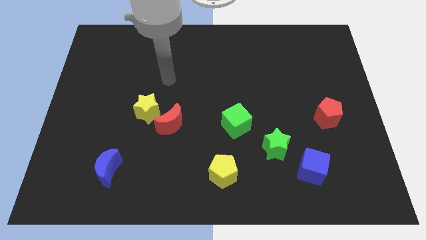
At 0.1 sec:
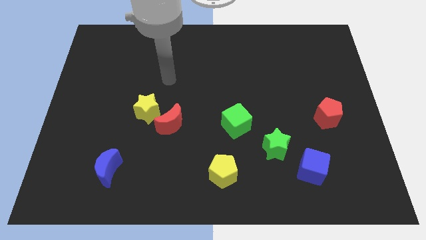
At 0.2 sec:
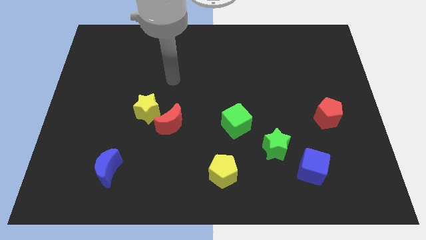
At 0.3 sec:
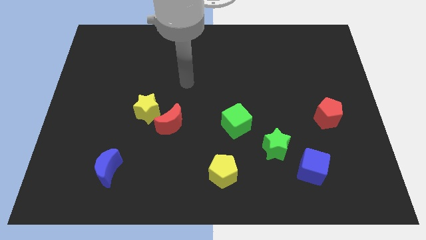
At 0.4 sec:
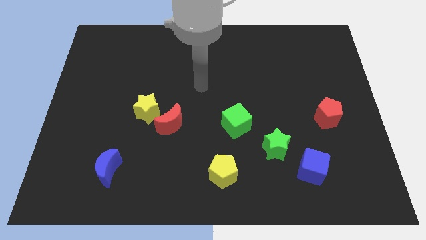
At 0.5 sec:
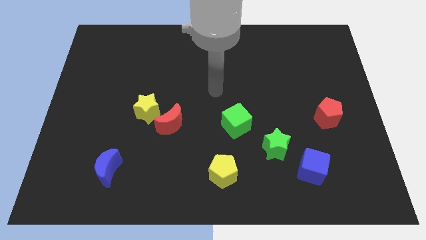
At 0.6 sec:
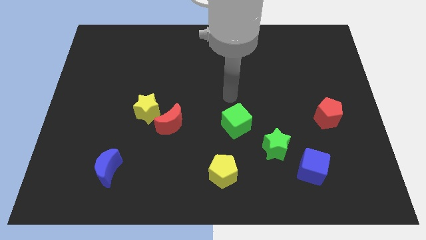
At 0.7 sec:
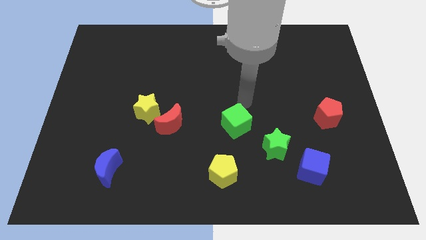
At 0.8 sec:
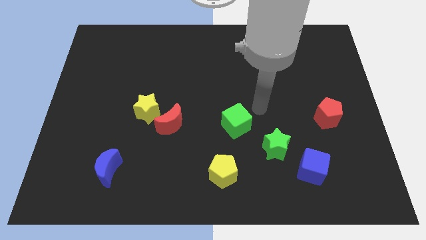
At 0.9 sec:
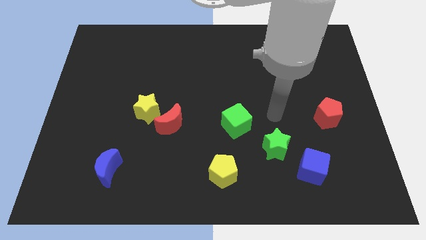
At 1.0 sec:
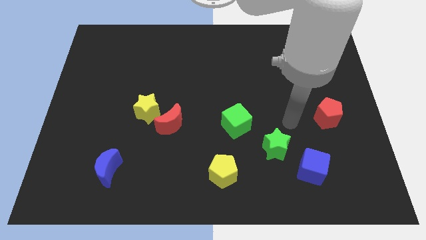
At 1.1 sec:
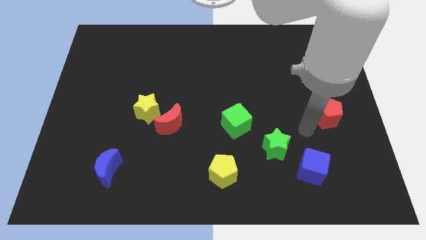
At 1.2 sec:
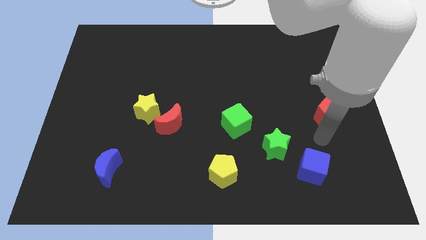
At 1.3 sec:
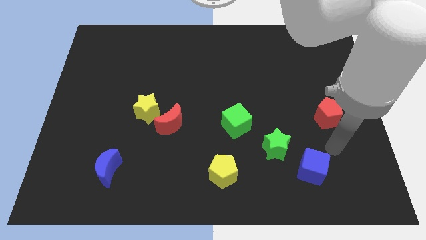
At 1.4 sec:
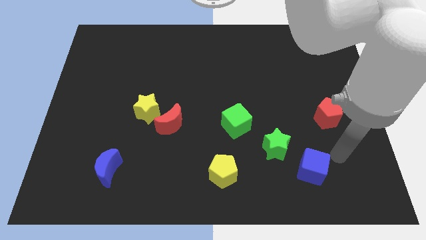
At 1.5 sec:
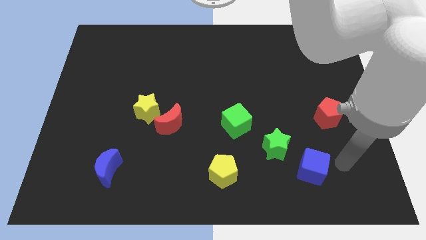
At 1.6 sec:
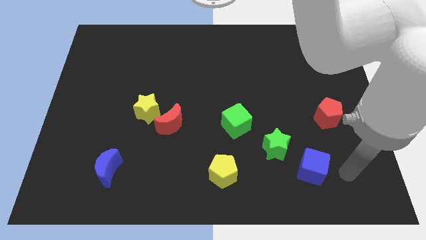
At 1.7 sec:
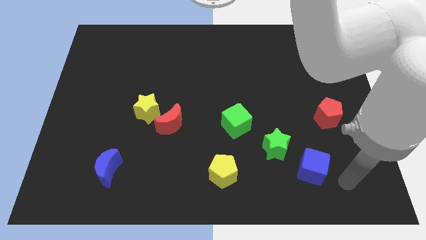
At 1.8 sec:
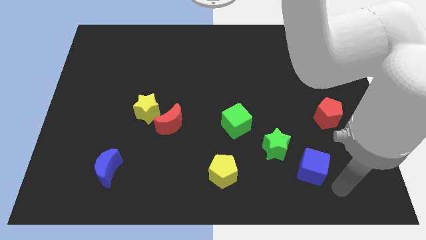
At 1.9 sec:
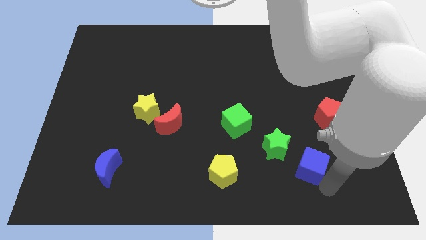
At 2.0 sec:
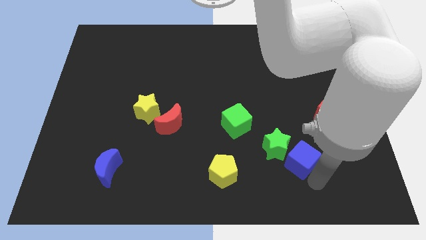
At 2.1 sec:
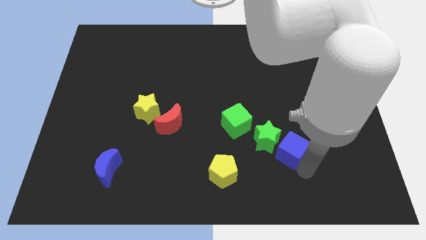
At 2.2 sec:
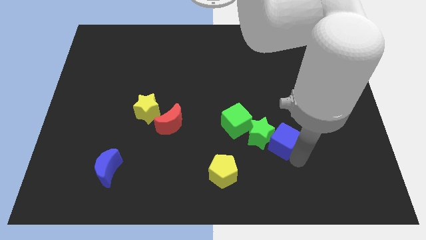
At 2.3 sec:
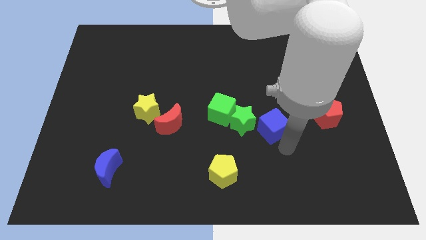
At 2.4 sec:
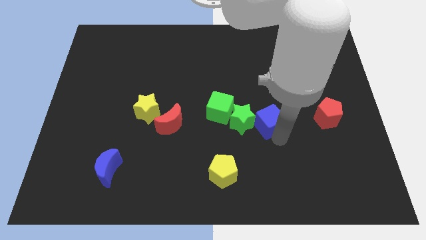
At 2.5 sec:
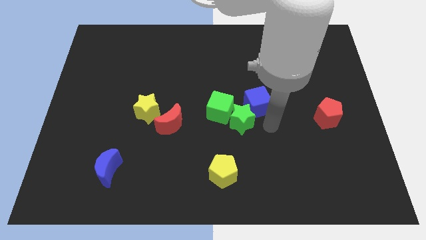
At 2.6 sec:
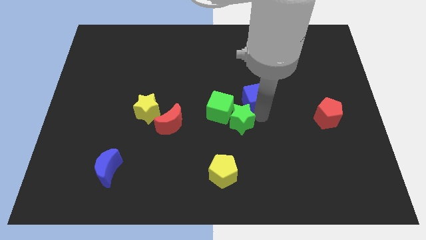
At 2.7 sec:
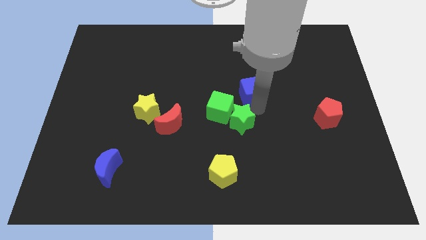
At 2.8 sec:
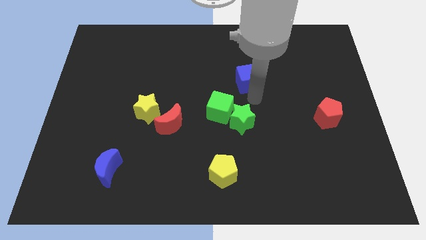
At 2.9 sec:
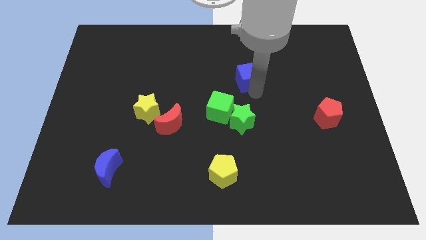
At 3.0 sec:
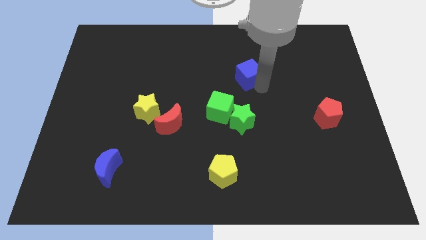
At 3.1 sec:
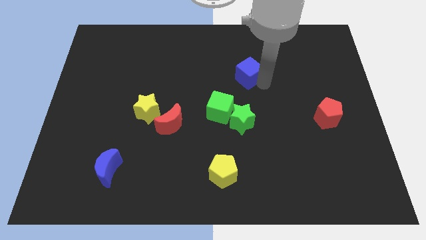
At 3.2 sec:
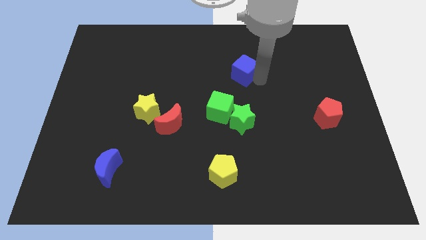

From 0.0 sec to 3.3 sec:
move the blue cube vertically to the top side of the green star

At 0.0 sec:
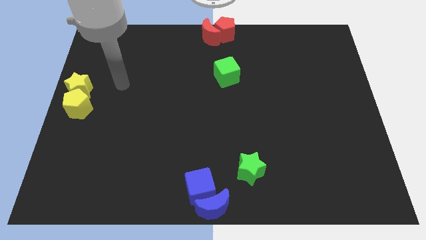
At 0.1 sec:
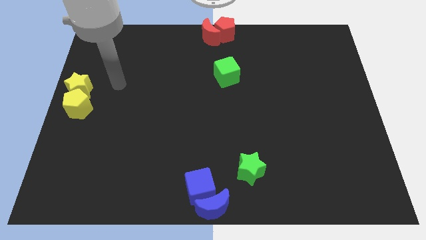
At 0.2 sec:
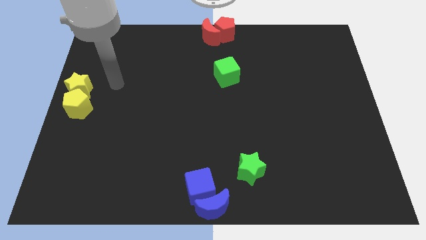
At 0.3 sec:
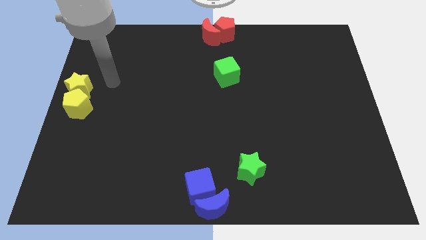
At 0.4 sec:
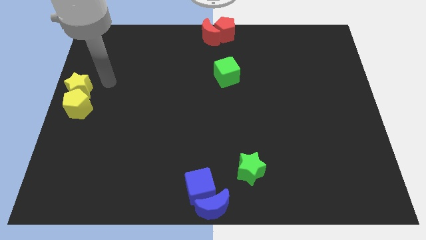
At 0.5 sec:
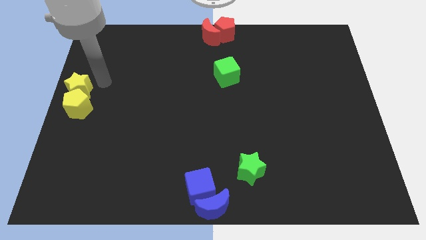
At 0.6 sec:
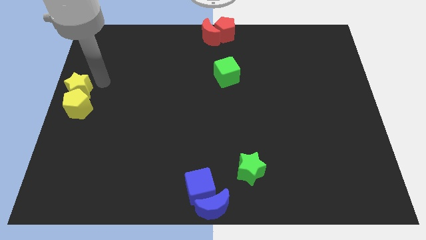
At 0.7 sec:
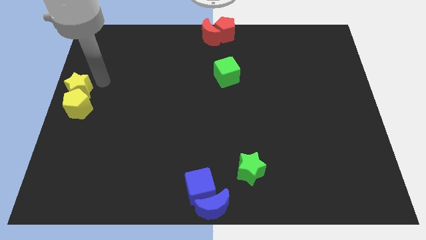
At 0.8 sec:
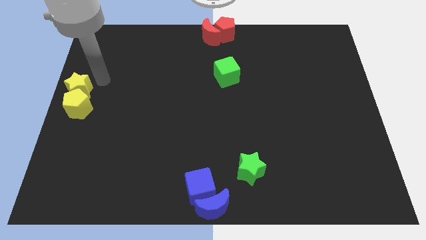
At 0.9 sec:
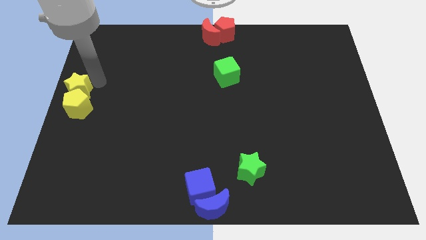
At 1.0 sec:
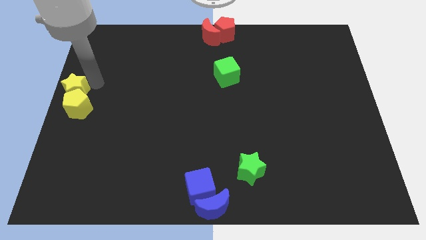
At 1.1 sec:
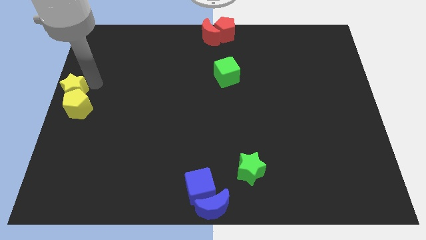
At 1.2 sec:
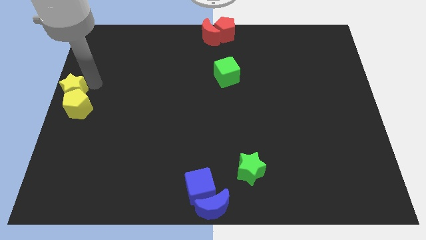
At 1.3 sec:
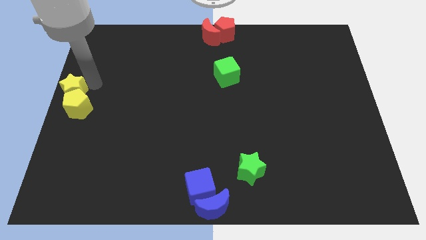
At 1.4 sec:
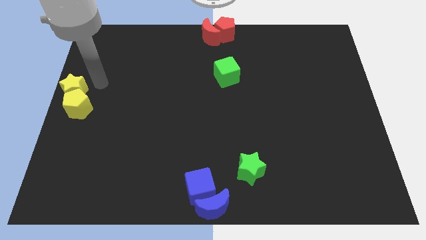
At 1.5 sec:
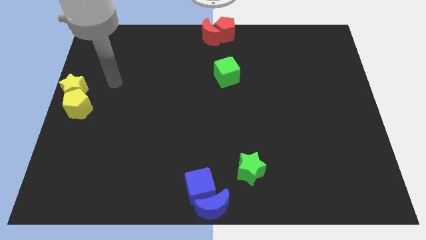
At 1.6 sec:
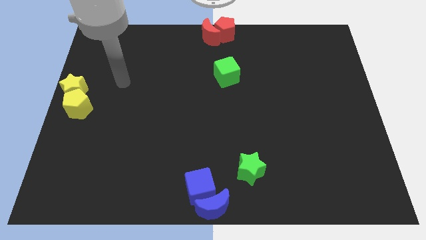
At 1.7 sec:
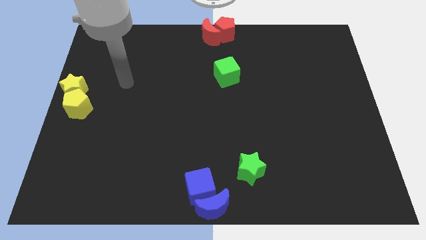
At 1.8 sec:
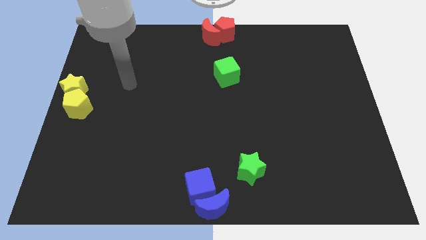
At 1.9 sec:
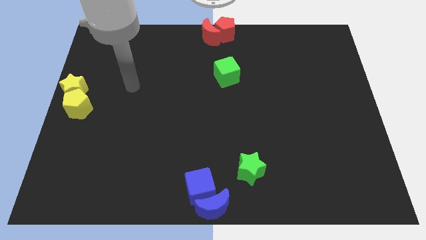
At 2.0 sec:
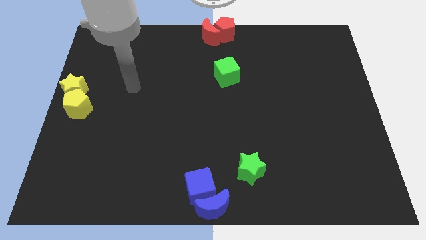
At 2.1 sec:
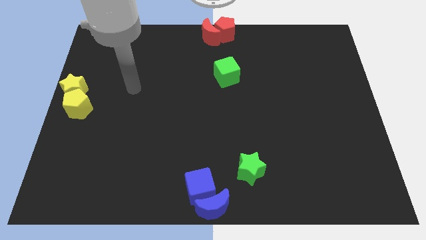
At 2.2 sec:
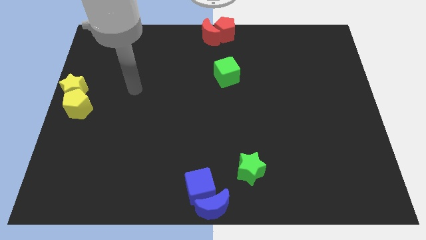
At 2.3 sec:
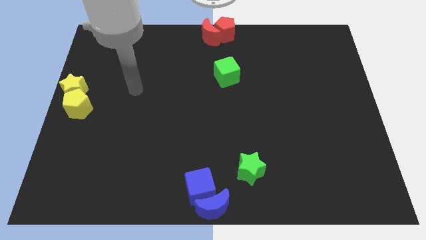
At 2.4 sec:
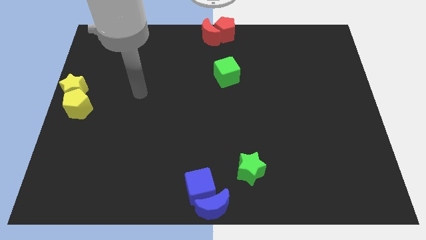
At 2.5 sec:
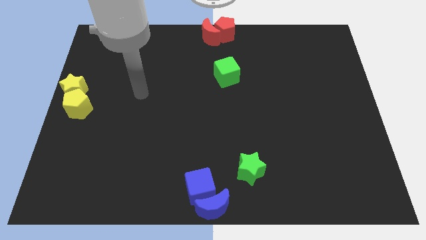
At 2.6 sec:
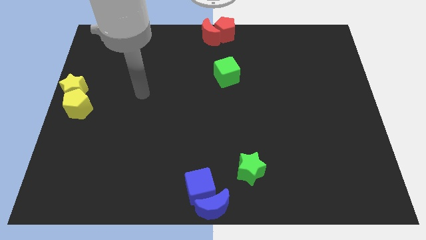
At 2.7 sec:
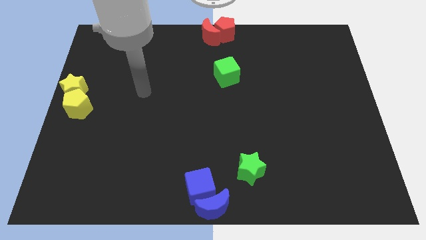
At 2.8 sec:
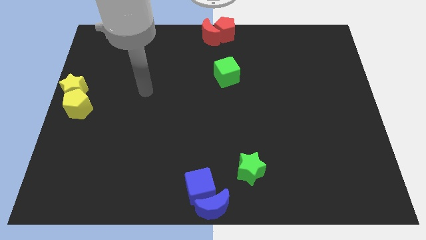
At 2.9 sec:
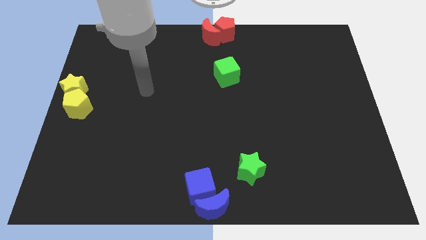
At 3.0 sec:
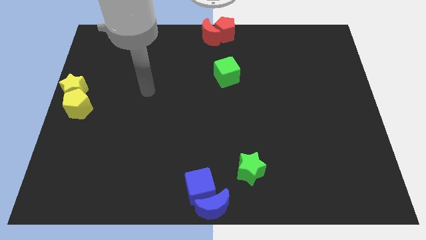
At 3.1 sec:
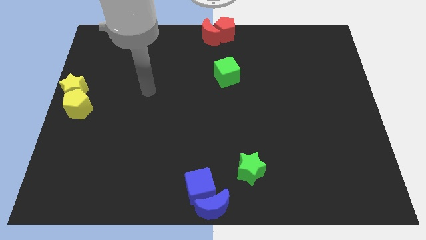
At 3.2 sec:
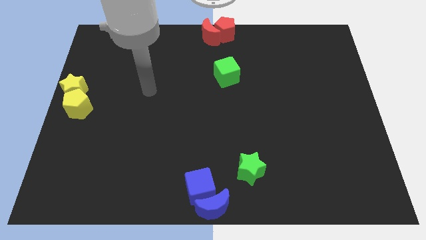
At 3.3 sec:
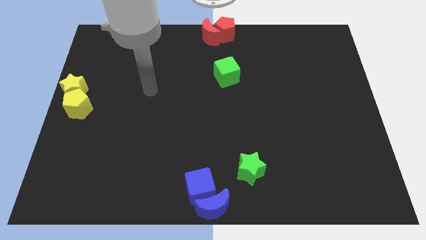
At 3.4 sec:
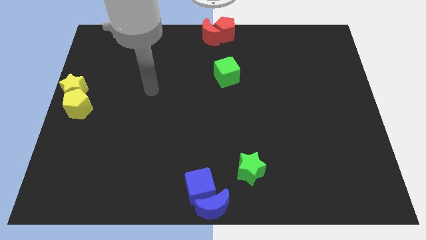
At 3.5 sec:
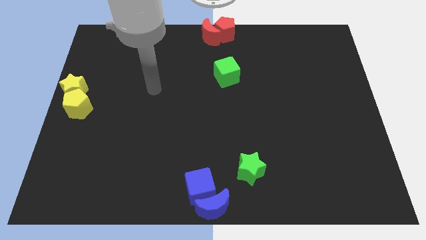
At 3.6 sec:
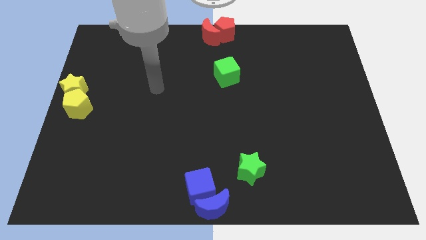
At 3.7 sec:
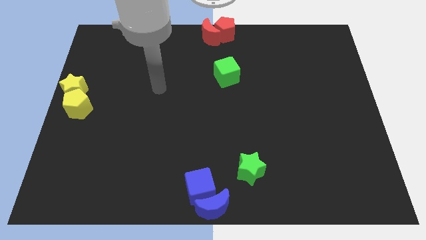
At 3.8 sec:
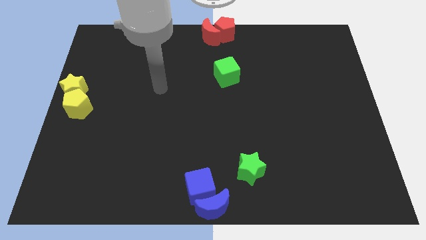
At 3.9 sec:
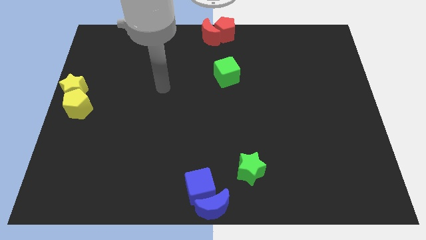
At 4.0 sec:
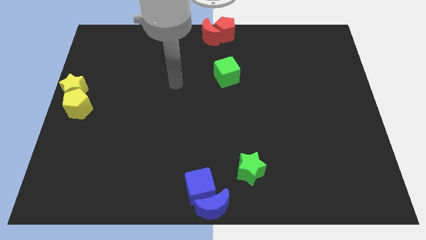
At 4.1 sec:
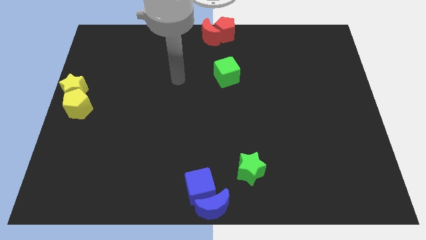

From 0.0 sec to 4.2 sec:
move yourself away from the yellow star

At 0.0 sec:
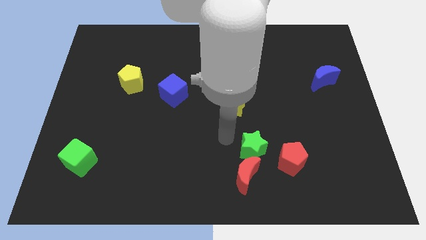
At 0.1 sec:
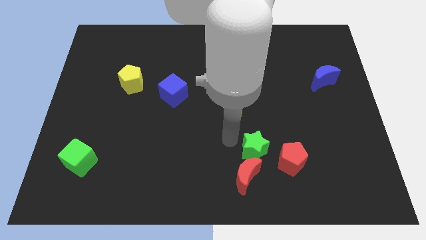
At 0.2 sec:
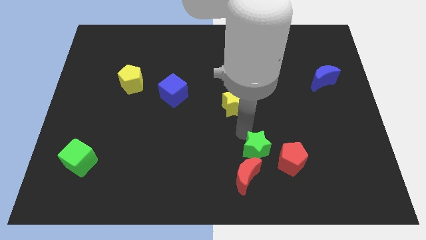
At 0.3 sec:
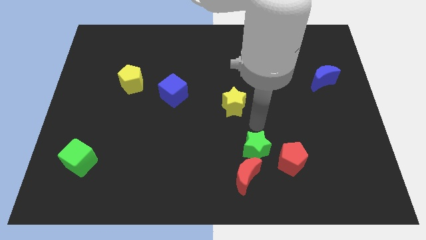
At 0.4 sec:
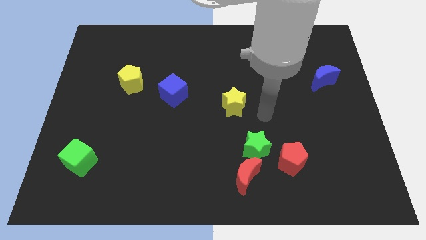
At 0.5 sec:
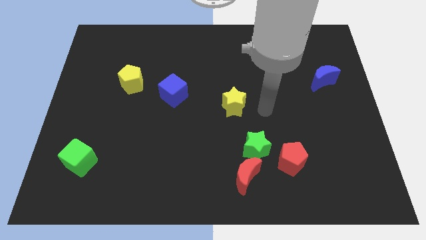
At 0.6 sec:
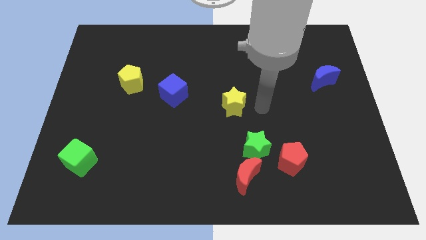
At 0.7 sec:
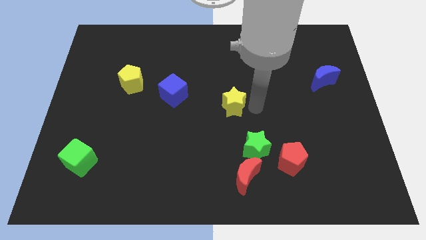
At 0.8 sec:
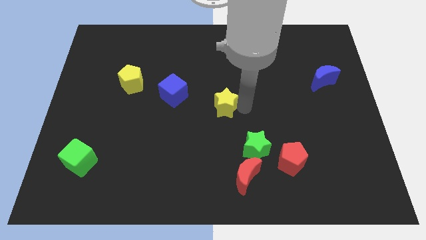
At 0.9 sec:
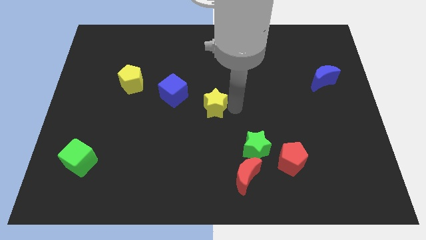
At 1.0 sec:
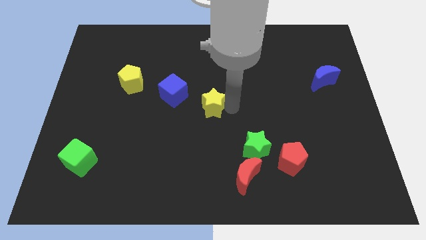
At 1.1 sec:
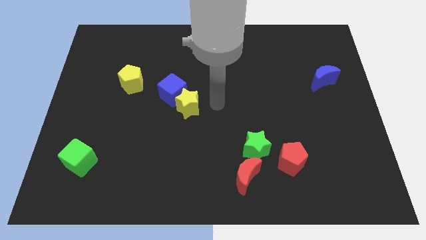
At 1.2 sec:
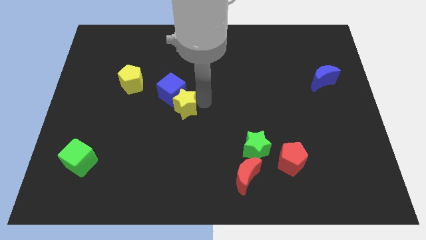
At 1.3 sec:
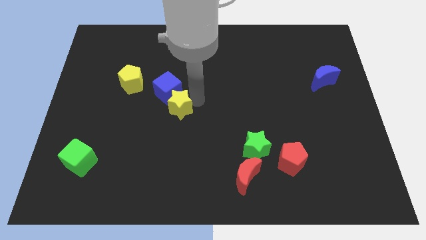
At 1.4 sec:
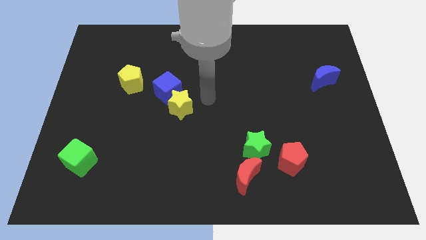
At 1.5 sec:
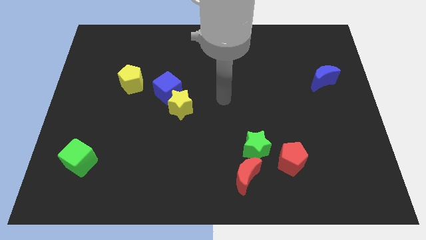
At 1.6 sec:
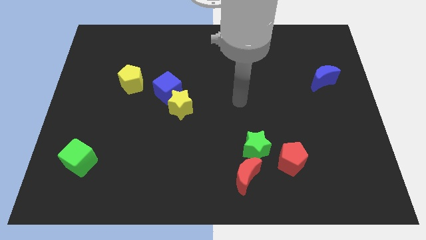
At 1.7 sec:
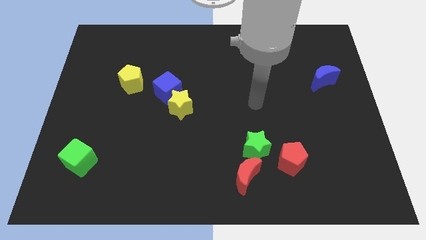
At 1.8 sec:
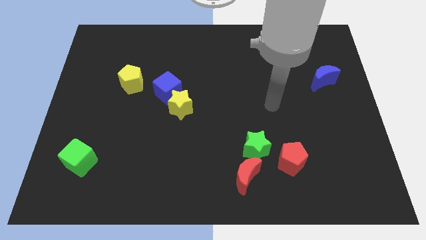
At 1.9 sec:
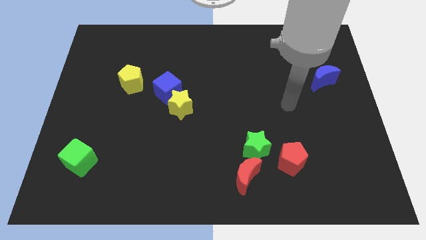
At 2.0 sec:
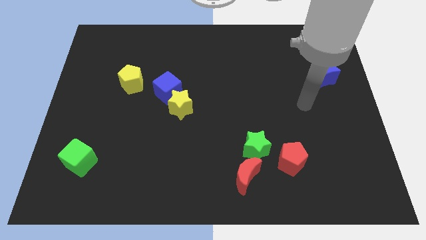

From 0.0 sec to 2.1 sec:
move the yellow star into the blue cube
